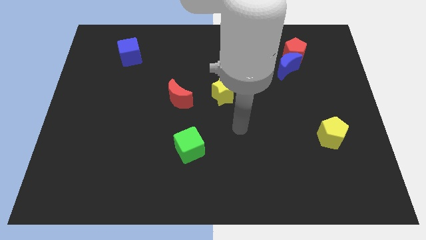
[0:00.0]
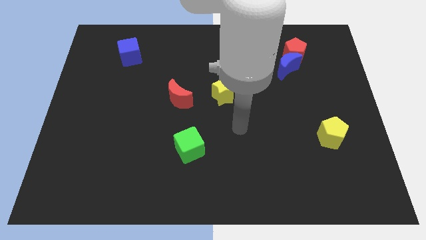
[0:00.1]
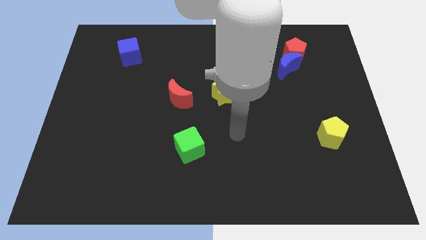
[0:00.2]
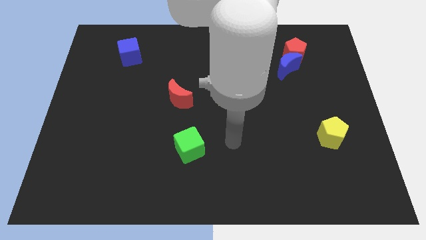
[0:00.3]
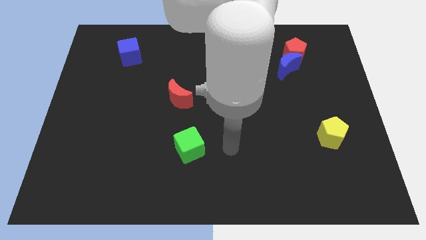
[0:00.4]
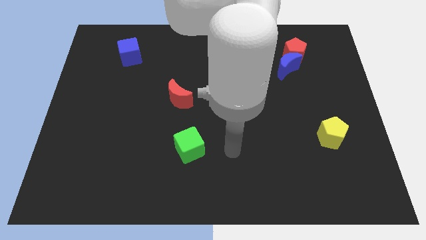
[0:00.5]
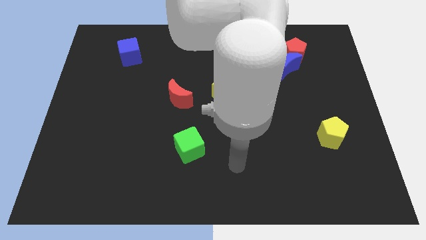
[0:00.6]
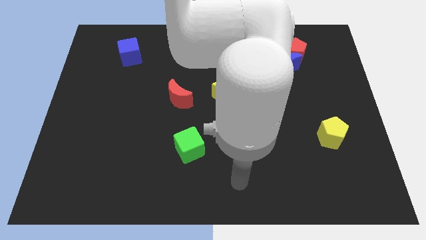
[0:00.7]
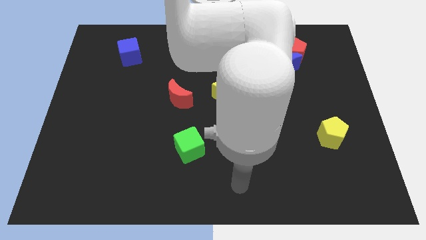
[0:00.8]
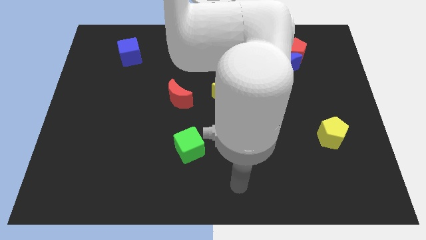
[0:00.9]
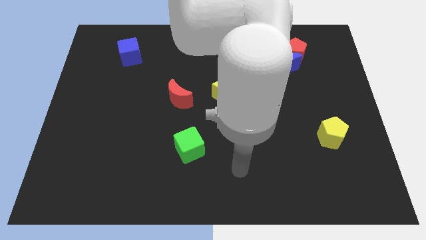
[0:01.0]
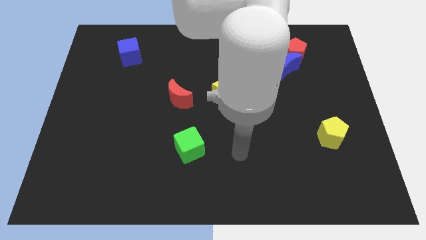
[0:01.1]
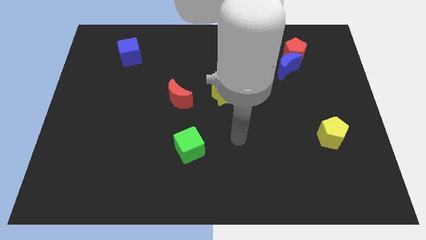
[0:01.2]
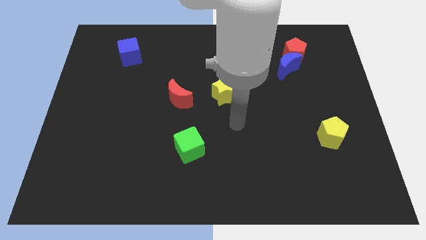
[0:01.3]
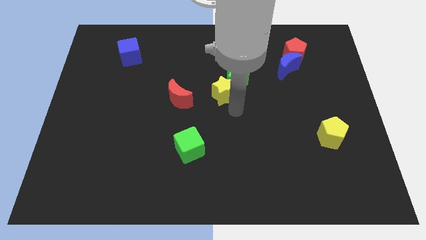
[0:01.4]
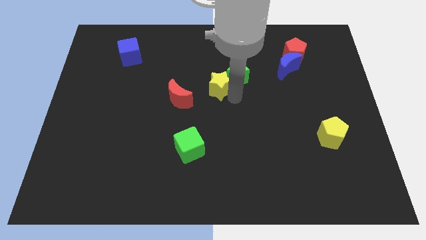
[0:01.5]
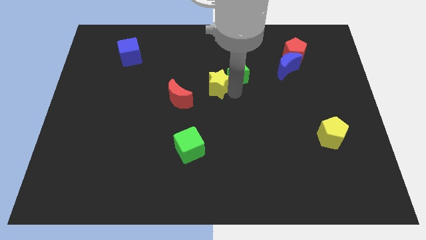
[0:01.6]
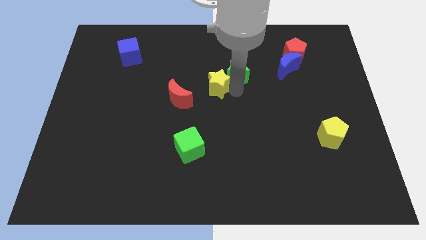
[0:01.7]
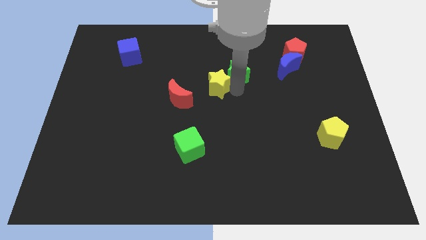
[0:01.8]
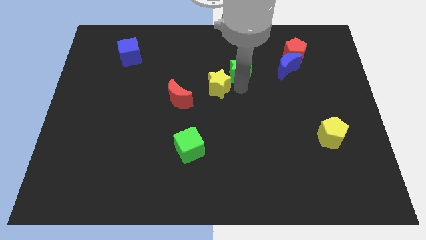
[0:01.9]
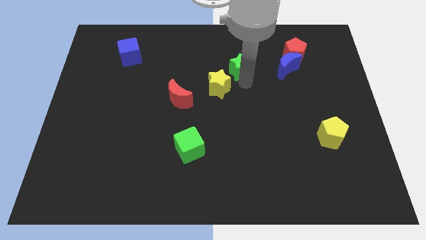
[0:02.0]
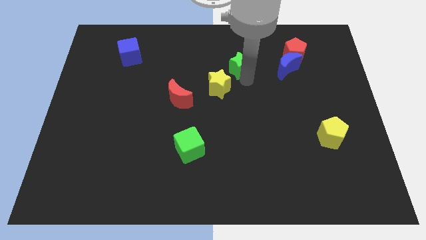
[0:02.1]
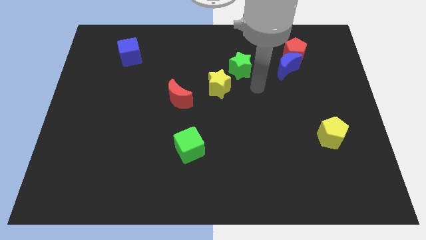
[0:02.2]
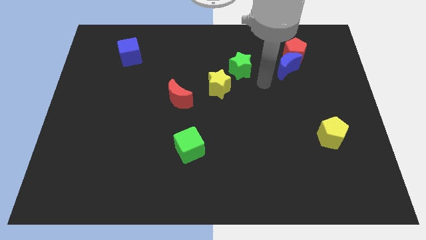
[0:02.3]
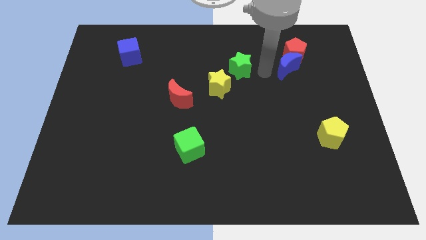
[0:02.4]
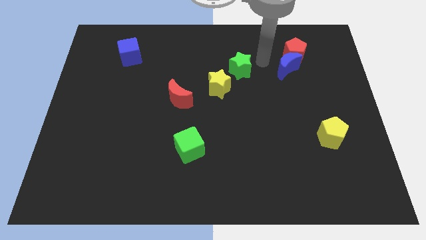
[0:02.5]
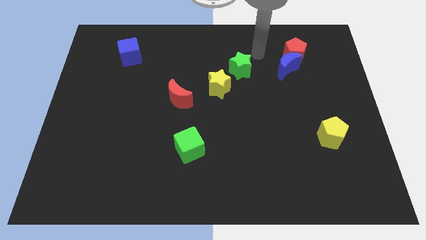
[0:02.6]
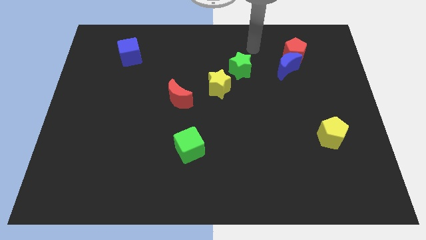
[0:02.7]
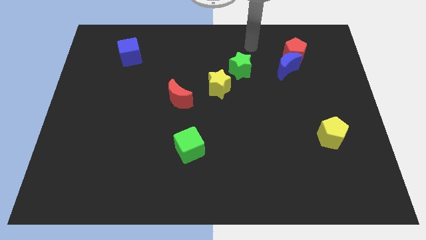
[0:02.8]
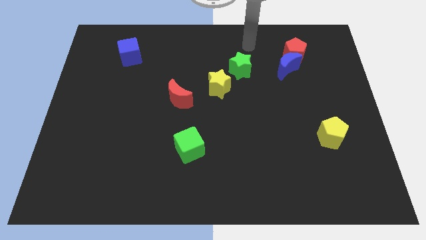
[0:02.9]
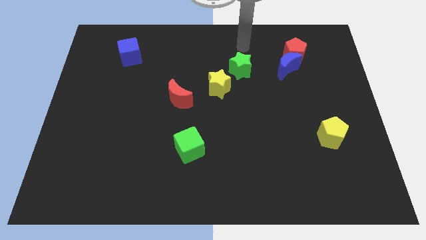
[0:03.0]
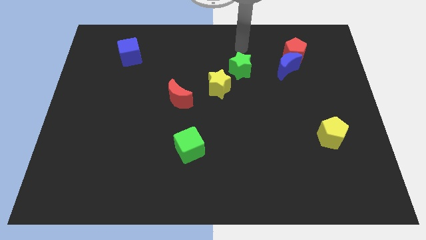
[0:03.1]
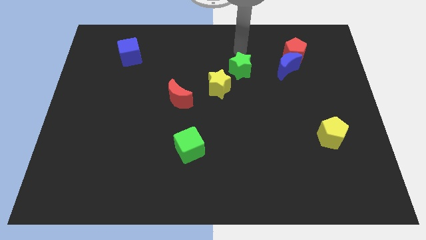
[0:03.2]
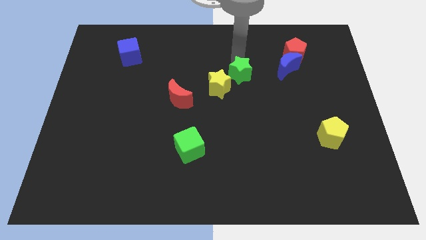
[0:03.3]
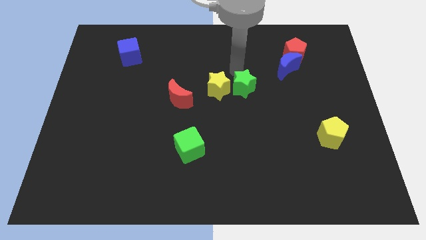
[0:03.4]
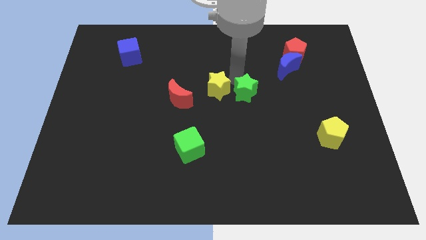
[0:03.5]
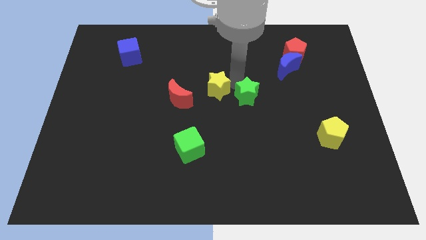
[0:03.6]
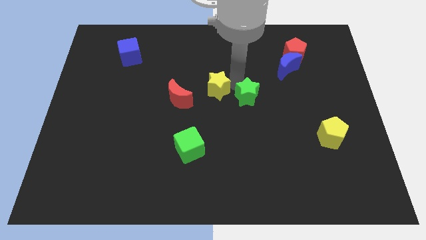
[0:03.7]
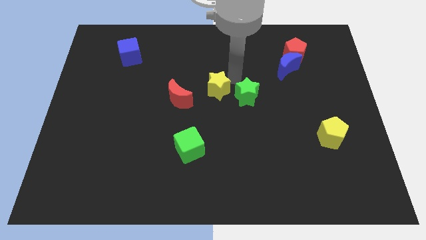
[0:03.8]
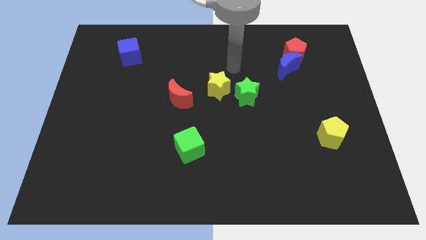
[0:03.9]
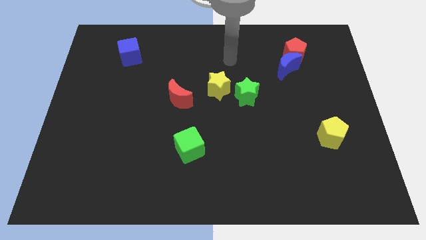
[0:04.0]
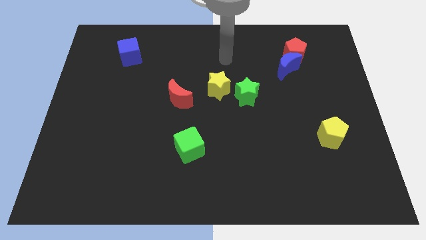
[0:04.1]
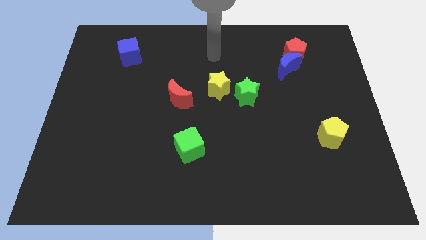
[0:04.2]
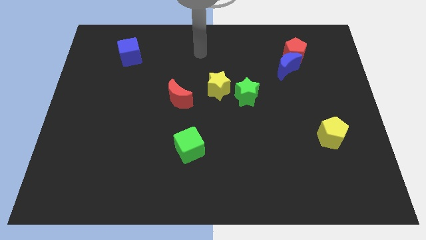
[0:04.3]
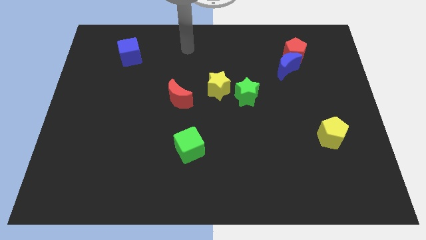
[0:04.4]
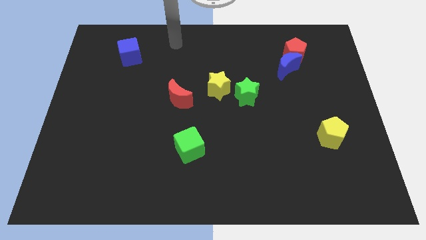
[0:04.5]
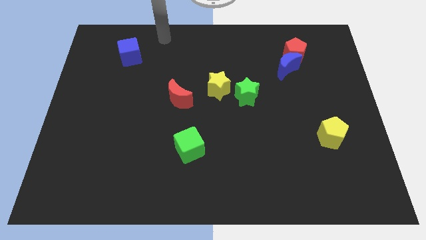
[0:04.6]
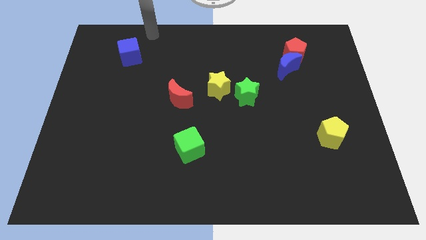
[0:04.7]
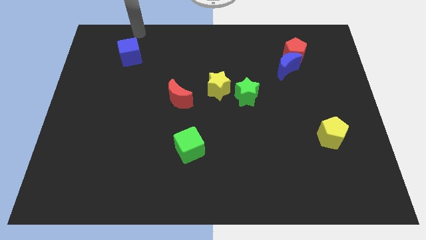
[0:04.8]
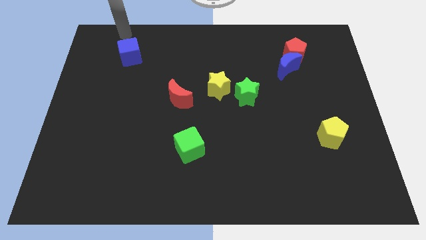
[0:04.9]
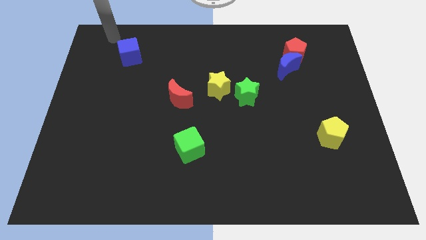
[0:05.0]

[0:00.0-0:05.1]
adjust stars at the center of the board

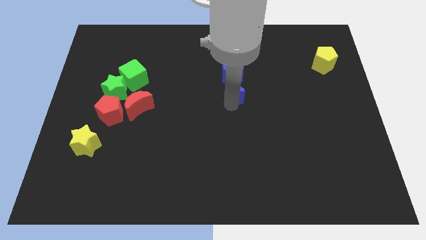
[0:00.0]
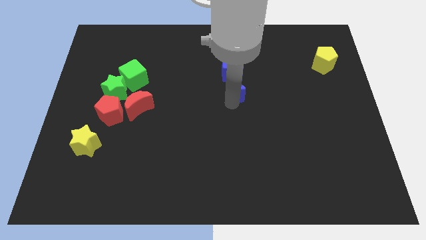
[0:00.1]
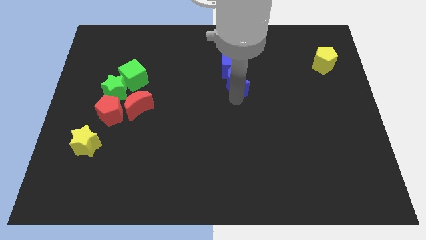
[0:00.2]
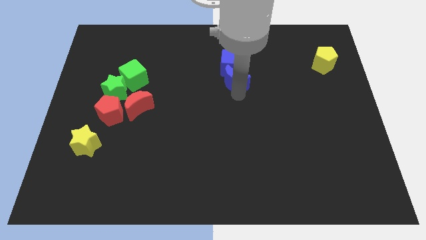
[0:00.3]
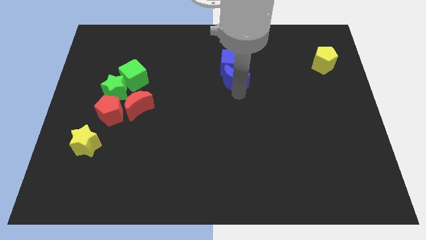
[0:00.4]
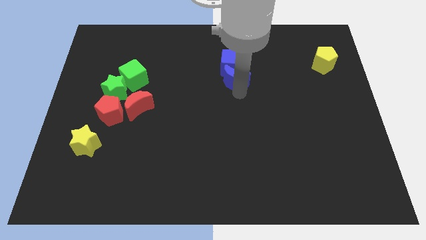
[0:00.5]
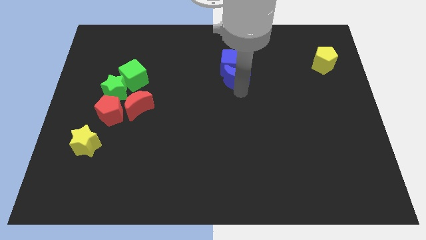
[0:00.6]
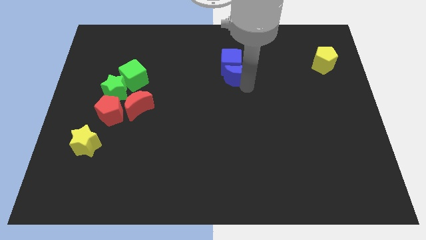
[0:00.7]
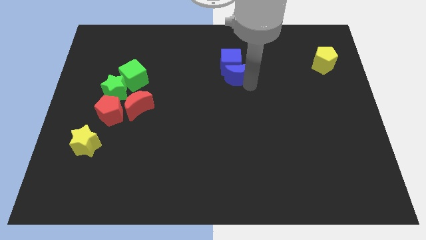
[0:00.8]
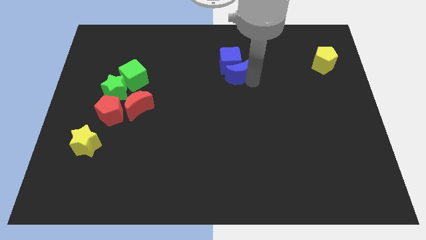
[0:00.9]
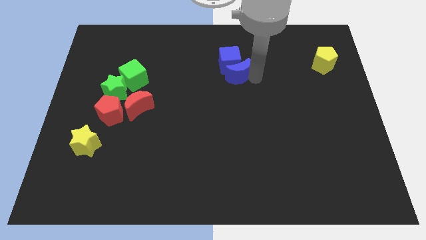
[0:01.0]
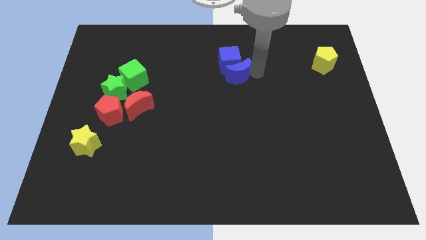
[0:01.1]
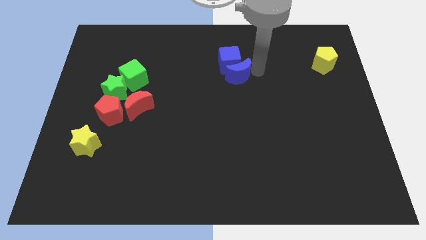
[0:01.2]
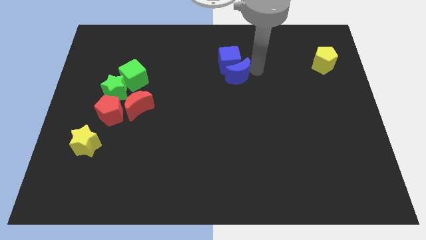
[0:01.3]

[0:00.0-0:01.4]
slide blue cube with blue moon towards the top center

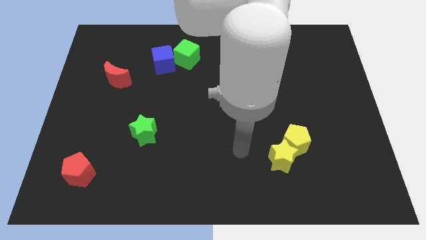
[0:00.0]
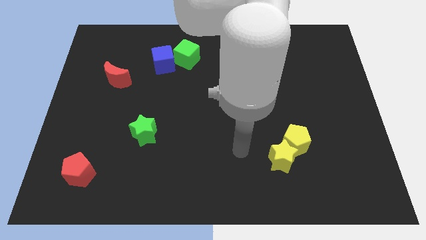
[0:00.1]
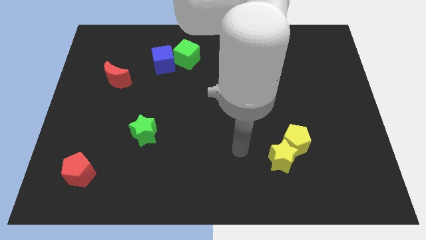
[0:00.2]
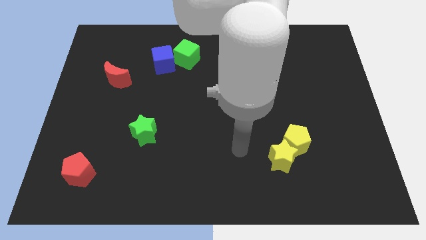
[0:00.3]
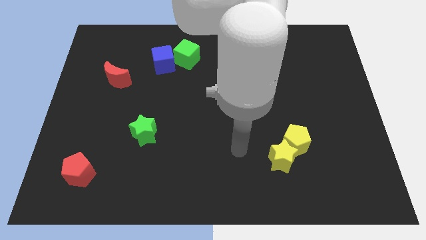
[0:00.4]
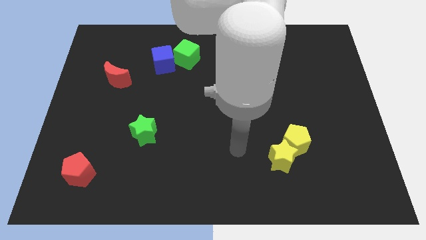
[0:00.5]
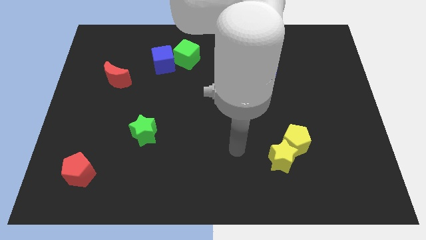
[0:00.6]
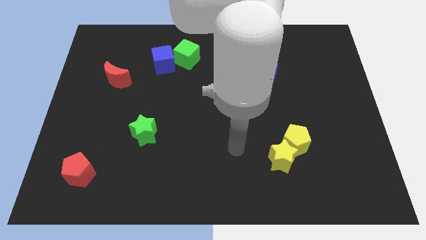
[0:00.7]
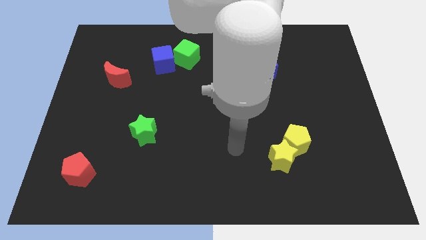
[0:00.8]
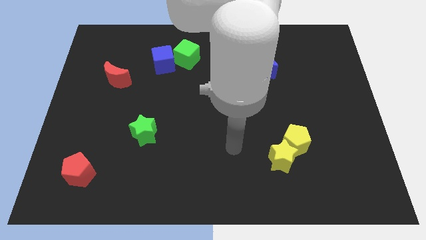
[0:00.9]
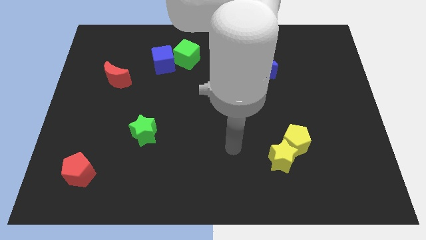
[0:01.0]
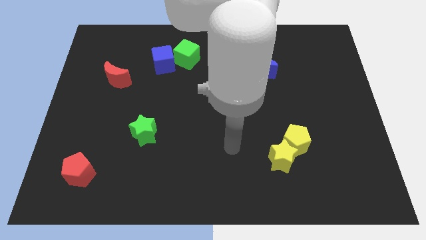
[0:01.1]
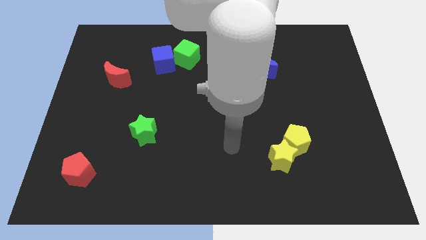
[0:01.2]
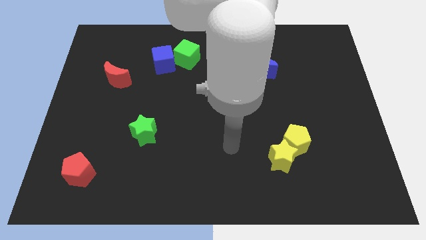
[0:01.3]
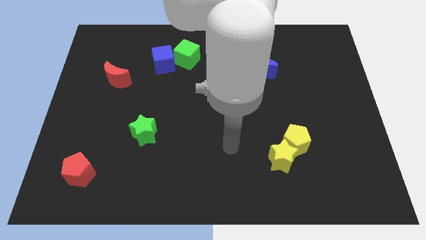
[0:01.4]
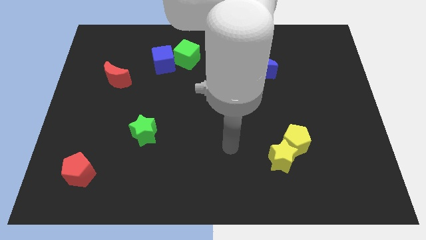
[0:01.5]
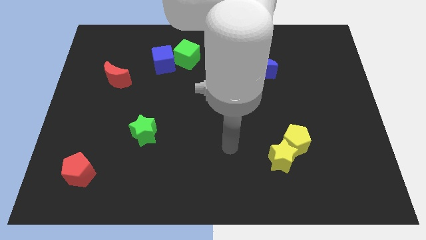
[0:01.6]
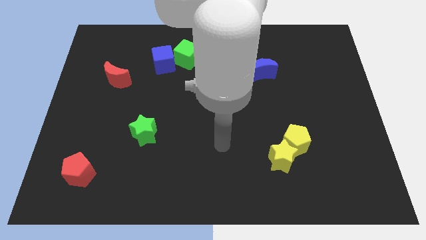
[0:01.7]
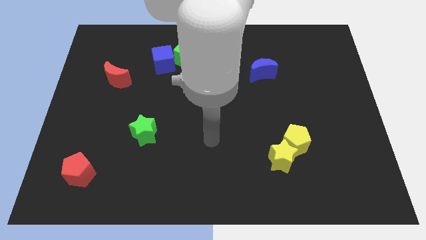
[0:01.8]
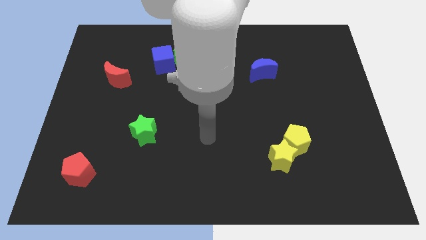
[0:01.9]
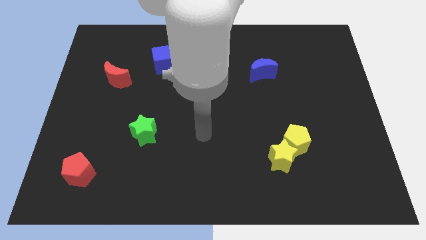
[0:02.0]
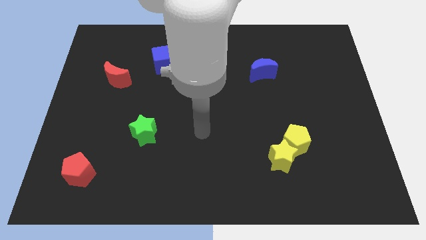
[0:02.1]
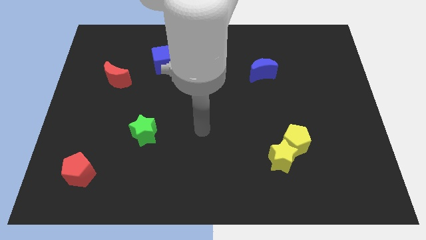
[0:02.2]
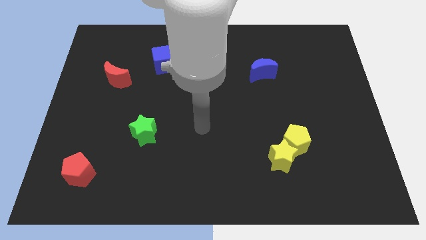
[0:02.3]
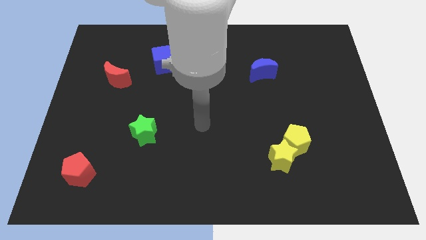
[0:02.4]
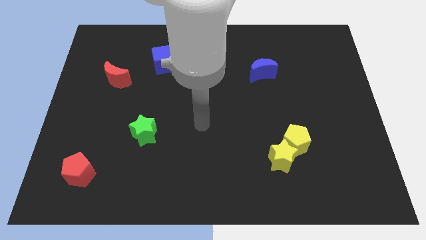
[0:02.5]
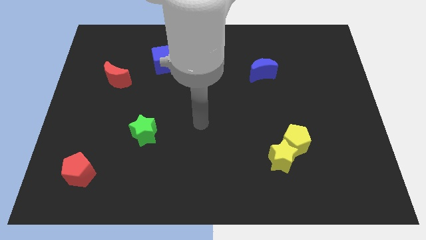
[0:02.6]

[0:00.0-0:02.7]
place your arm to the center of the board
